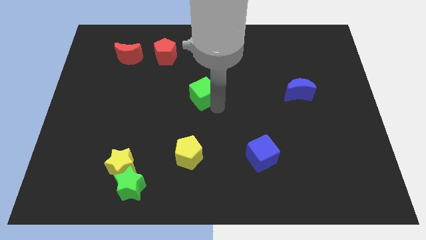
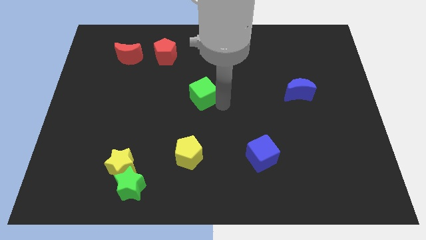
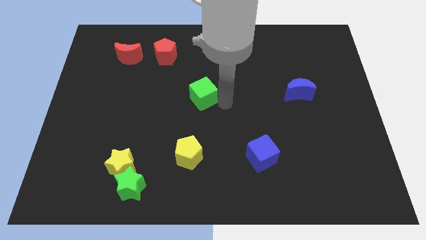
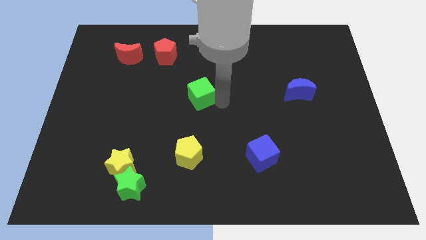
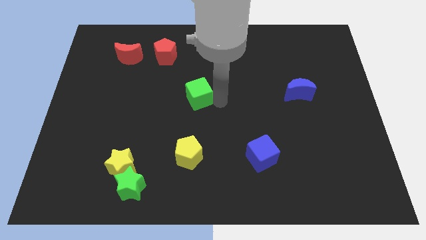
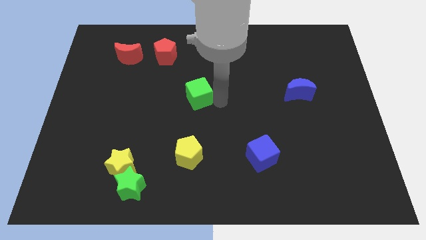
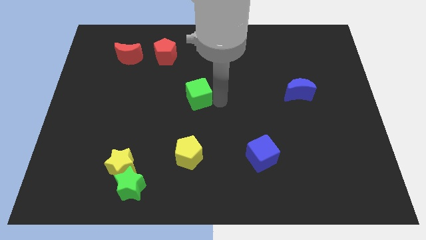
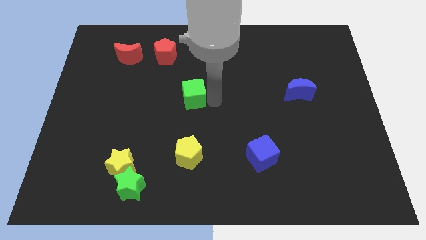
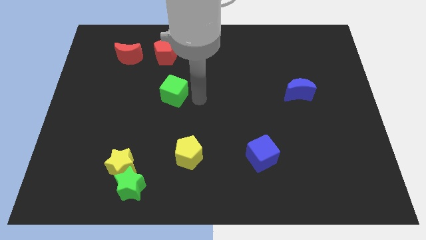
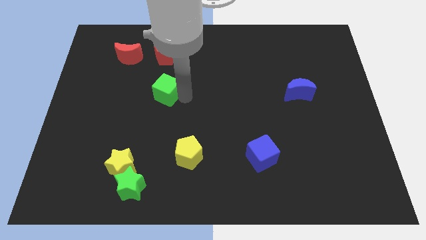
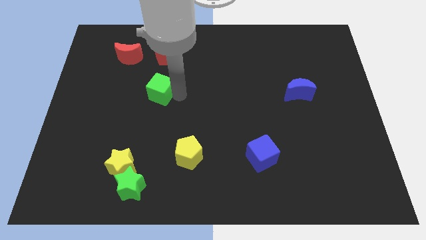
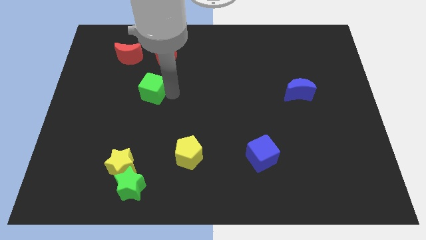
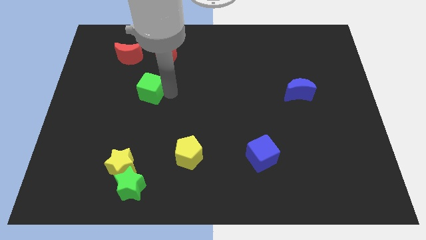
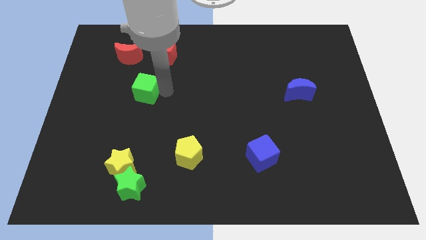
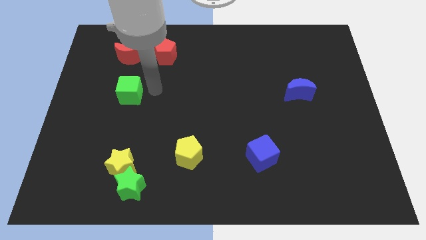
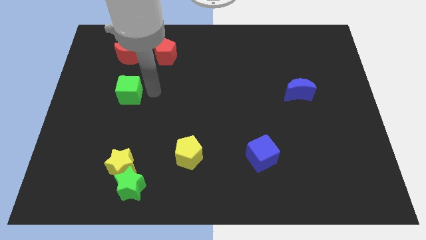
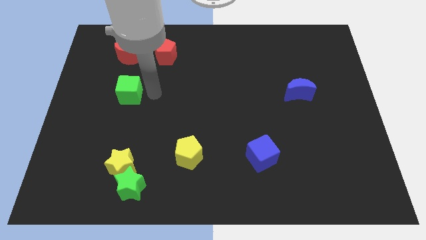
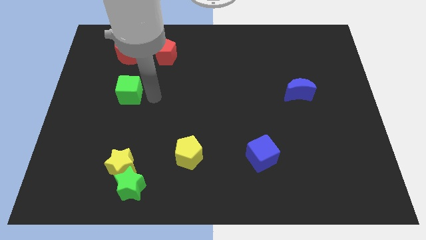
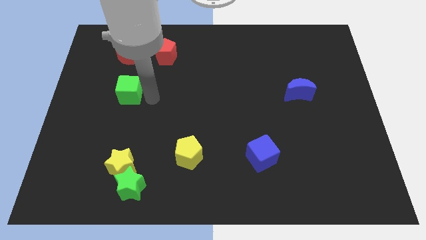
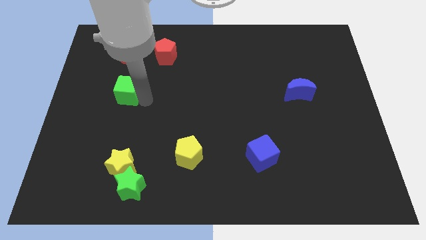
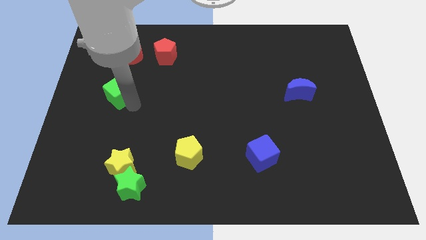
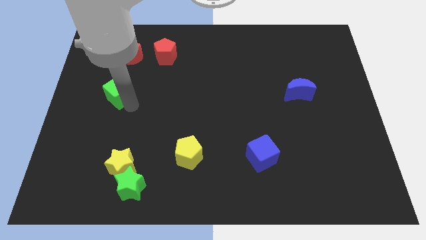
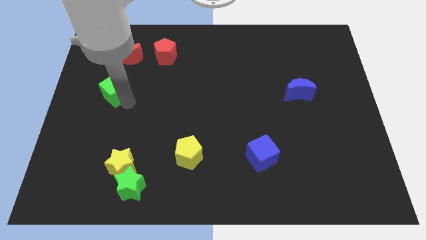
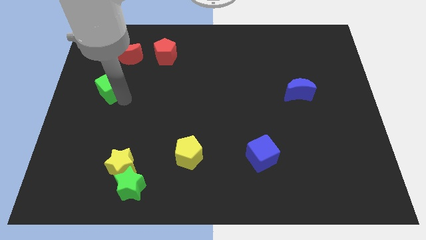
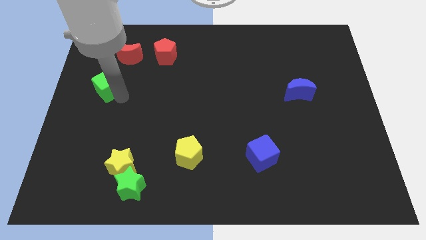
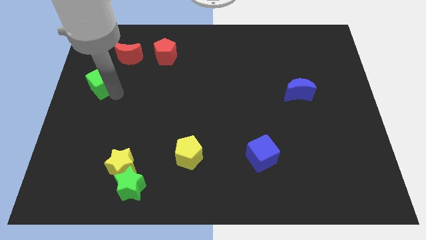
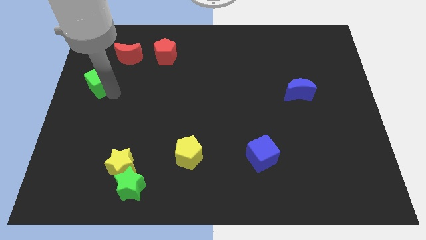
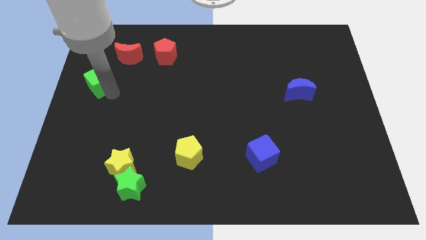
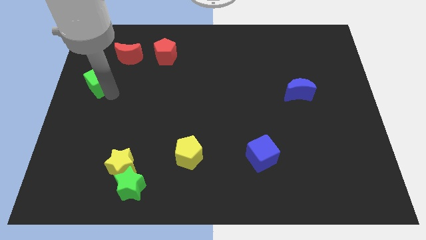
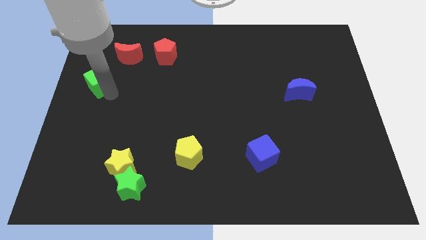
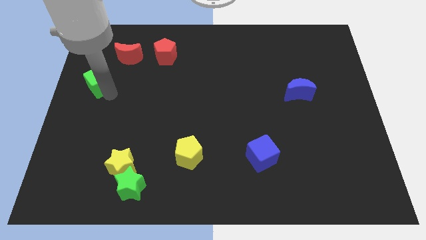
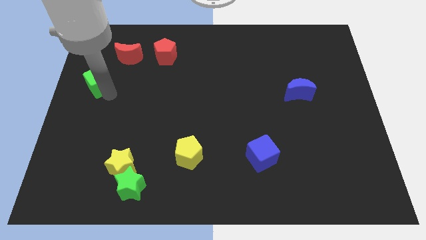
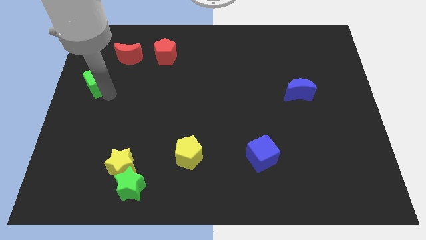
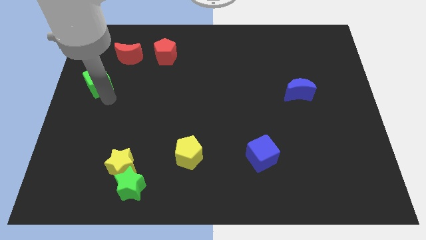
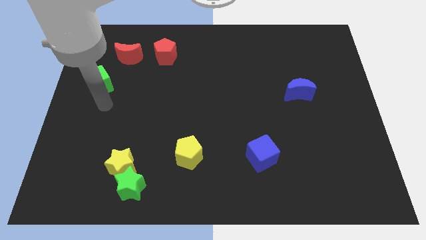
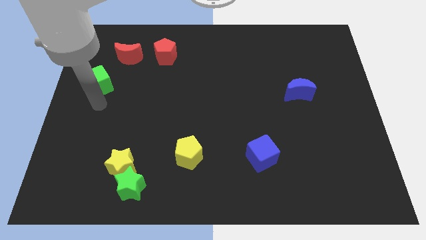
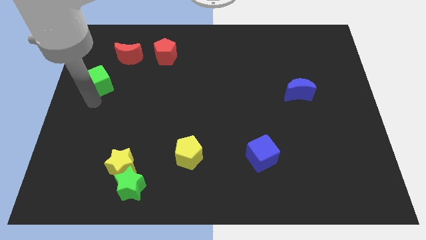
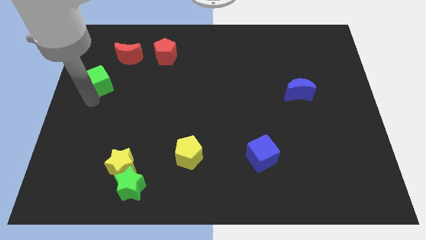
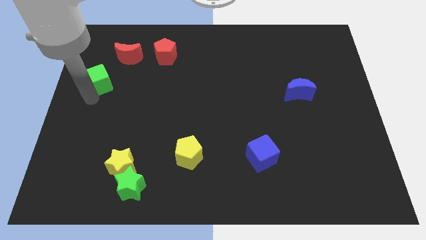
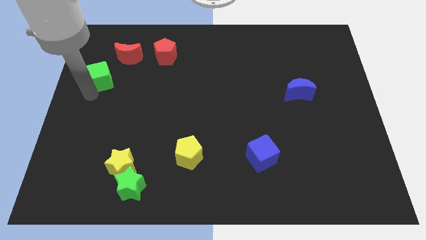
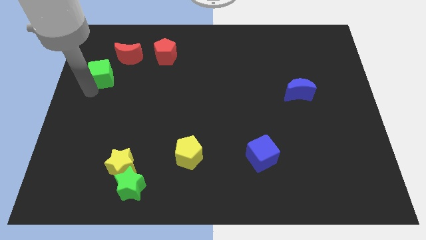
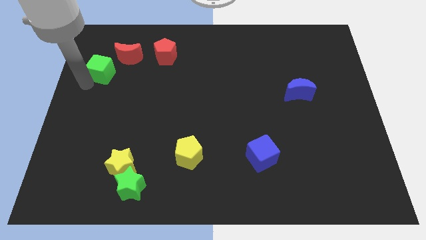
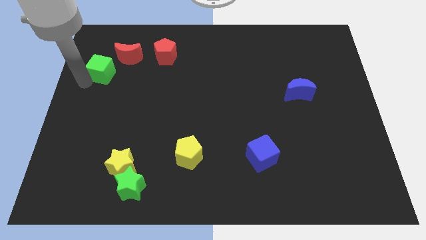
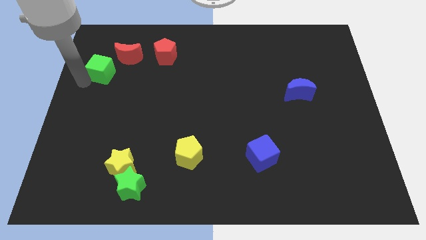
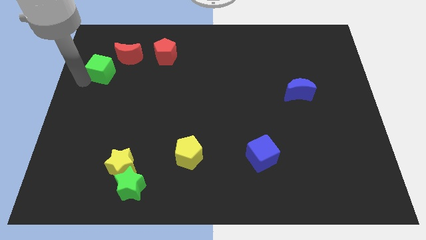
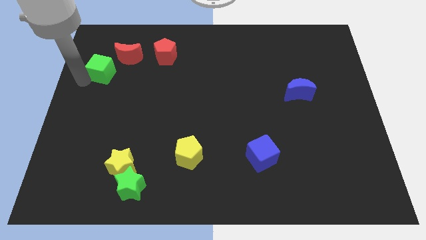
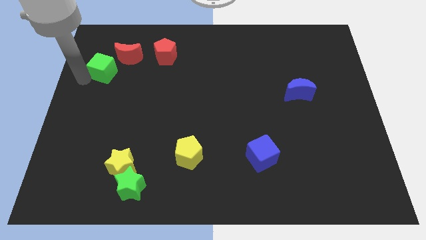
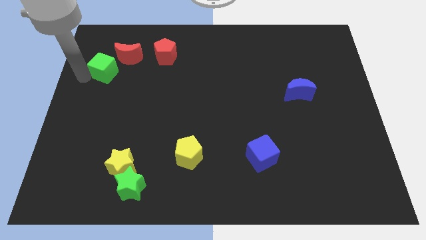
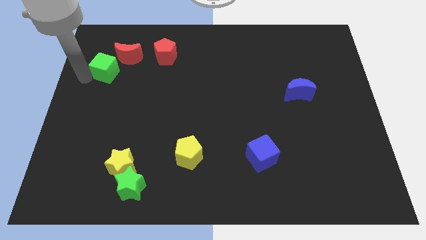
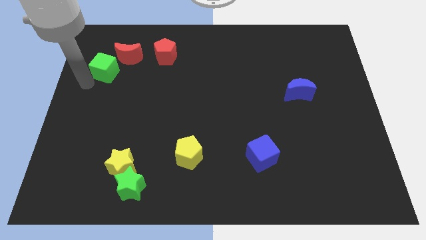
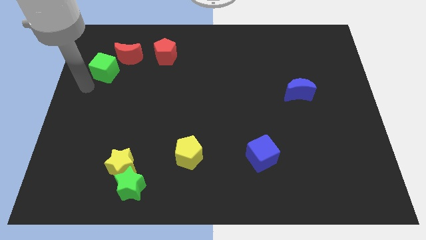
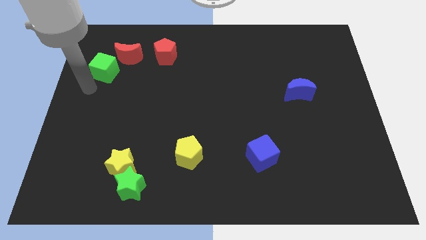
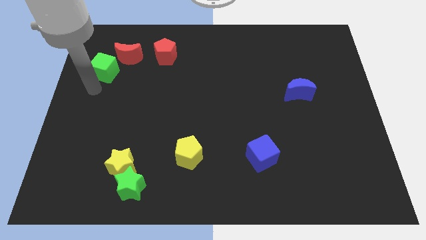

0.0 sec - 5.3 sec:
move green cube left below the red moon

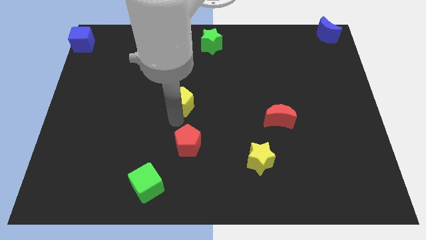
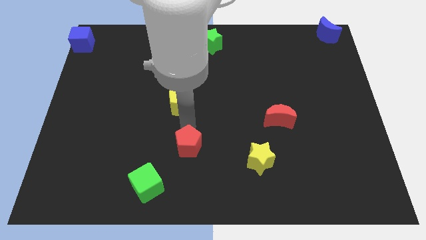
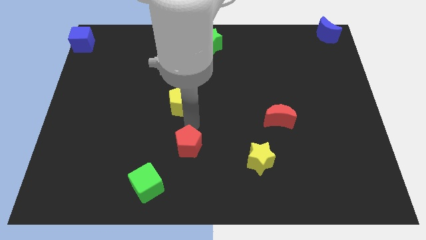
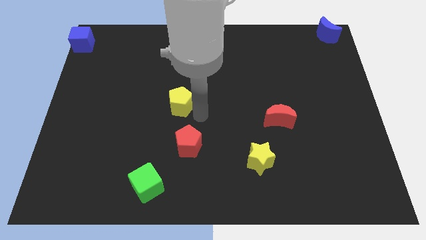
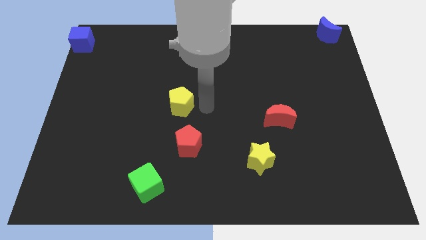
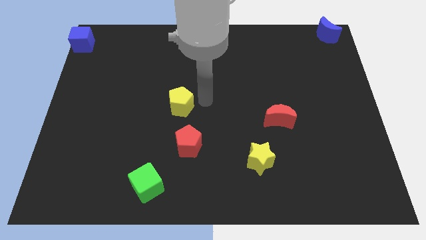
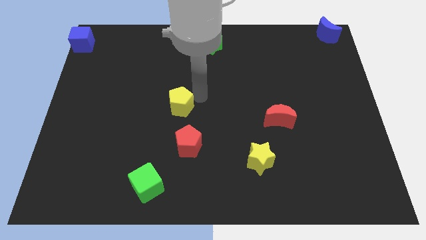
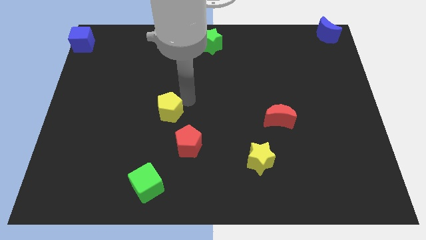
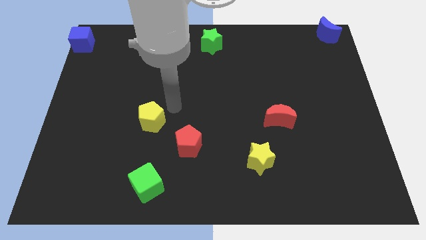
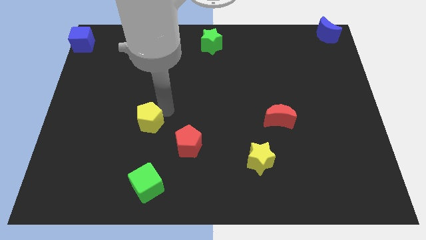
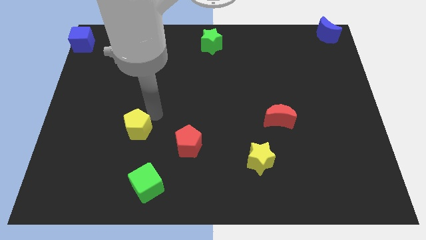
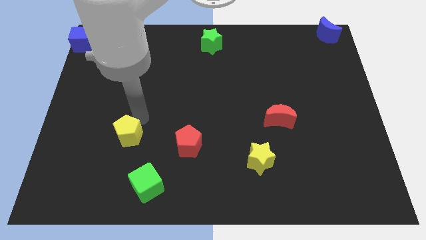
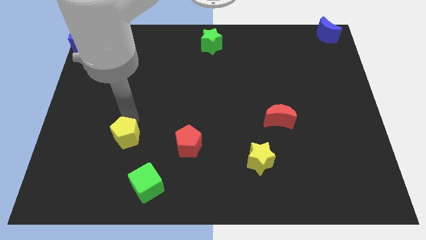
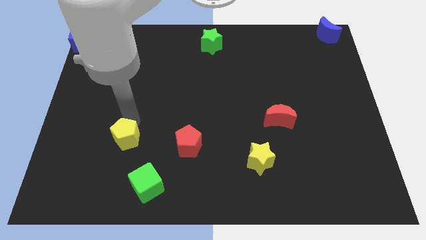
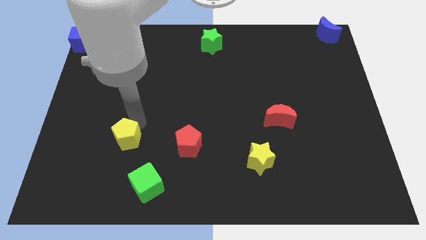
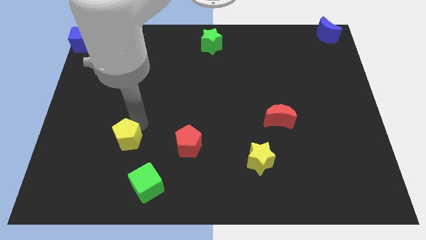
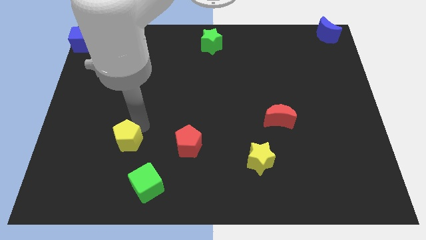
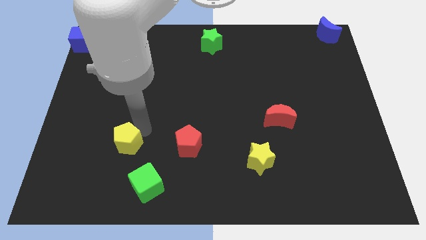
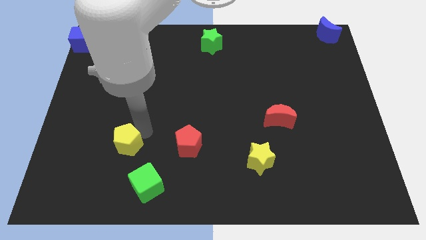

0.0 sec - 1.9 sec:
place the yellow pentagon left to the red pentagon

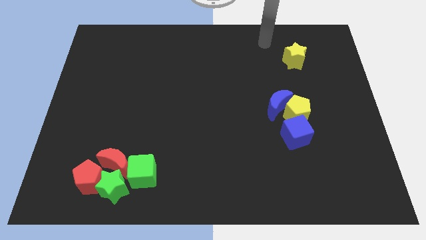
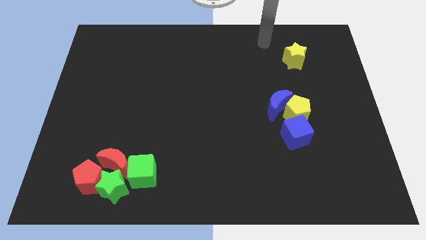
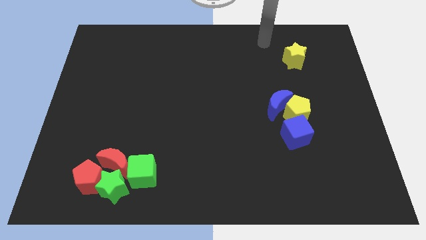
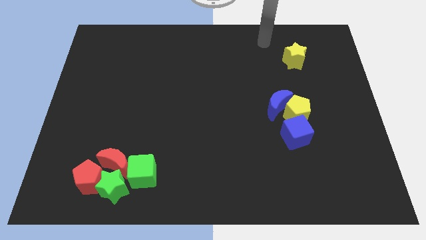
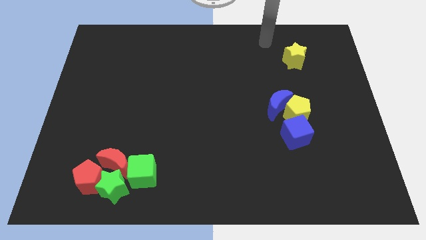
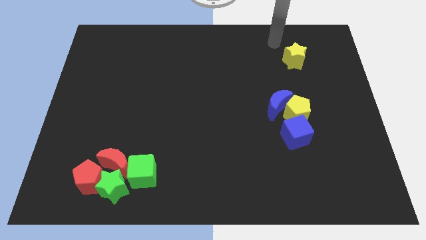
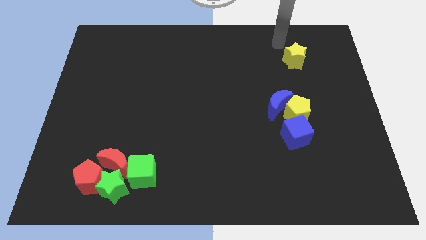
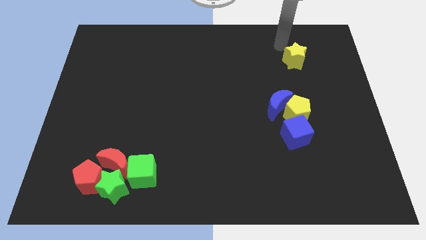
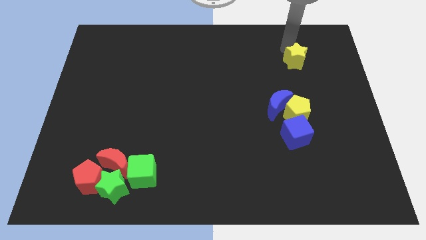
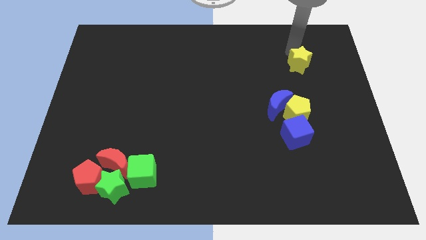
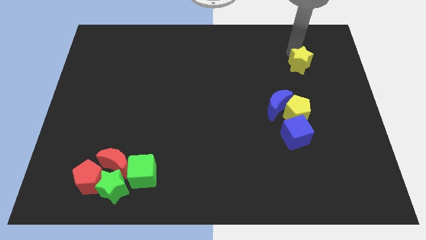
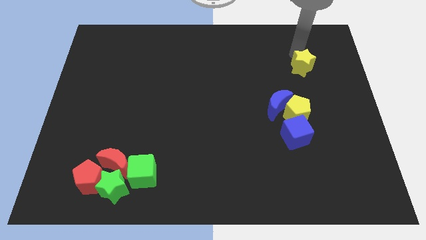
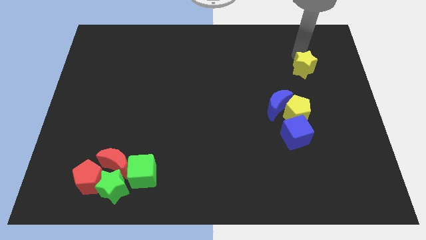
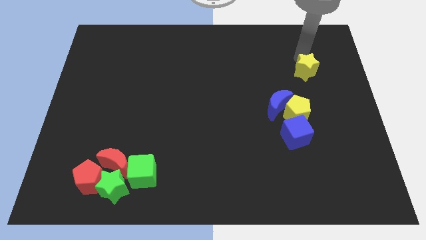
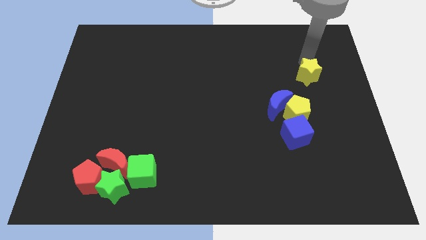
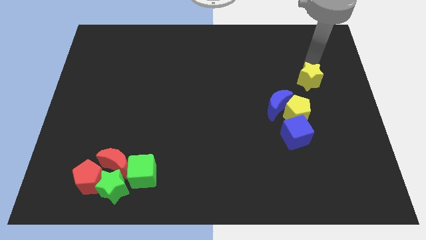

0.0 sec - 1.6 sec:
move the yellow star slightly to the bottom
